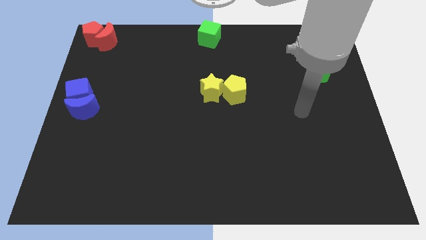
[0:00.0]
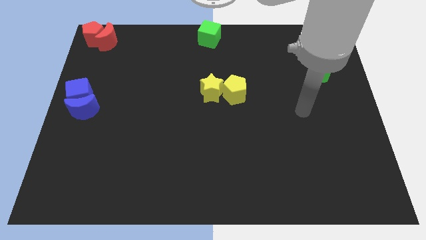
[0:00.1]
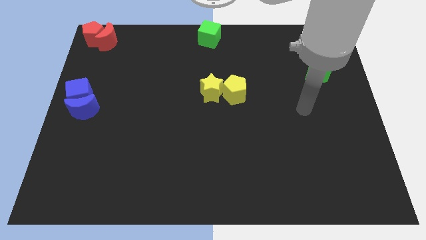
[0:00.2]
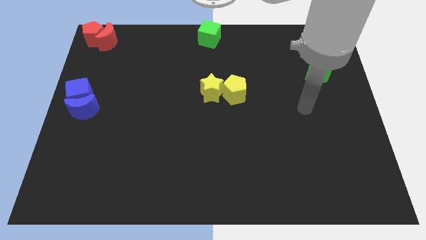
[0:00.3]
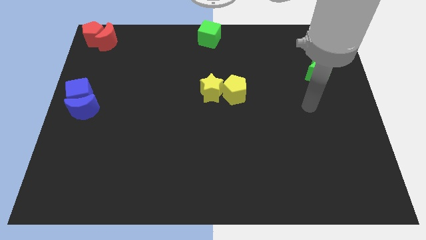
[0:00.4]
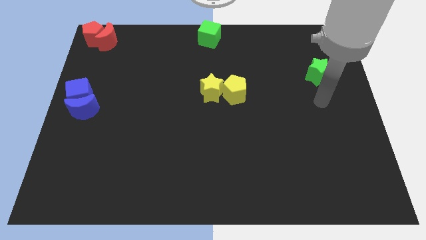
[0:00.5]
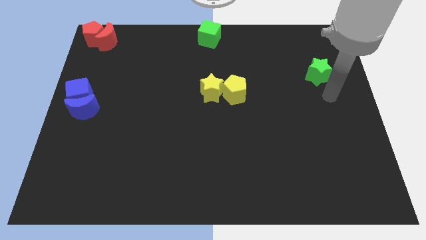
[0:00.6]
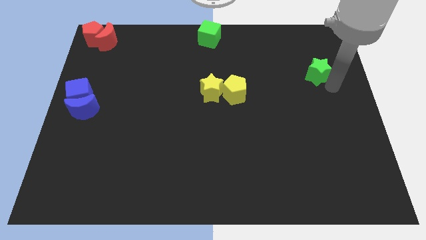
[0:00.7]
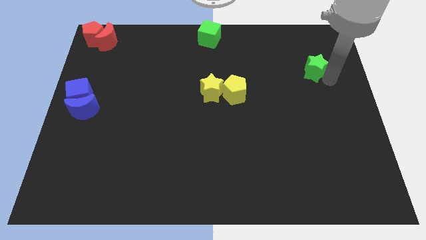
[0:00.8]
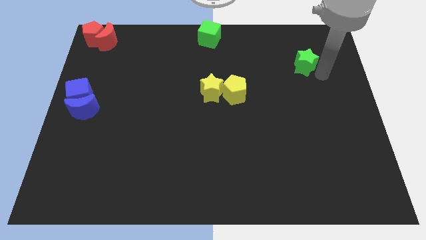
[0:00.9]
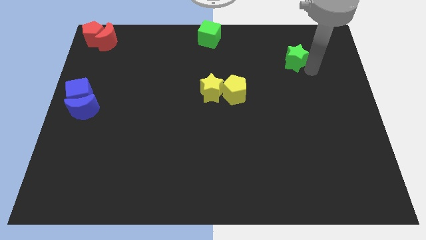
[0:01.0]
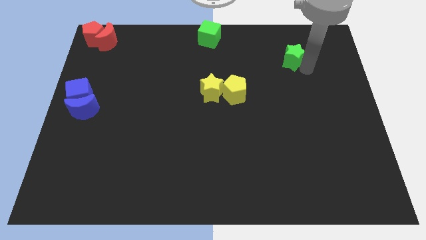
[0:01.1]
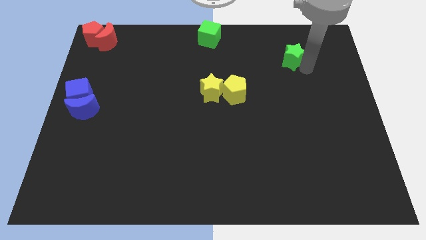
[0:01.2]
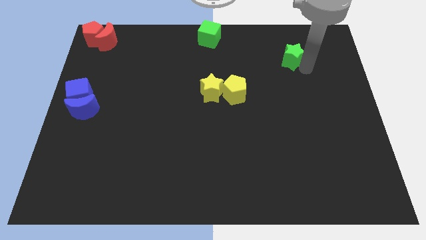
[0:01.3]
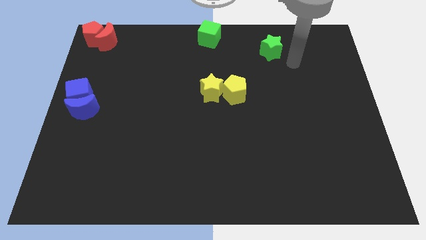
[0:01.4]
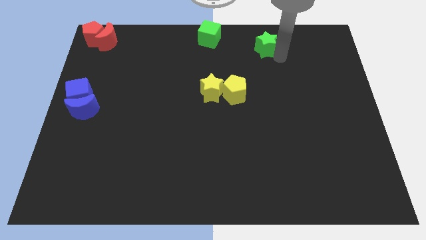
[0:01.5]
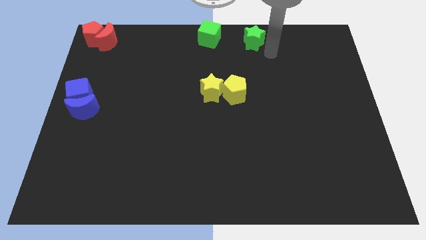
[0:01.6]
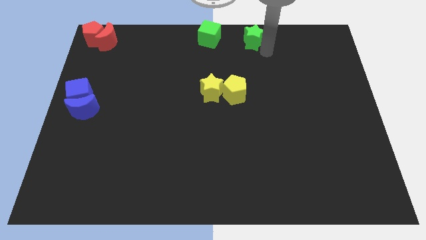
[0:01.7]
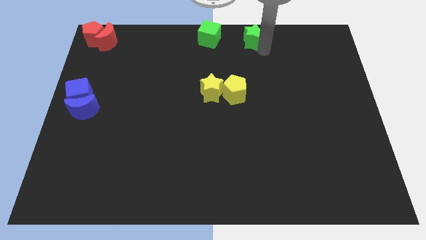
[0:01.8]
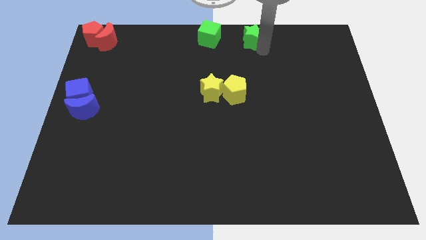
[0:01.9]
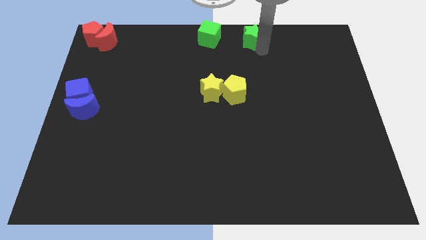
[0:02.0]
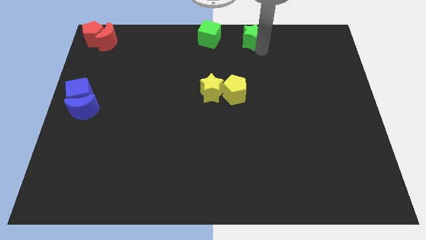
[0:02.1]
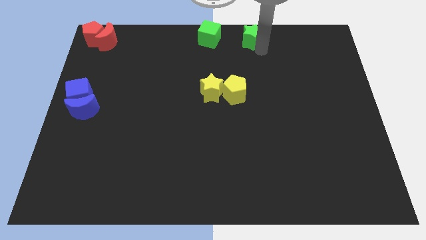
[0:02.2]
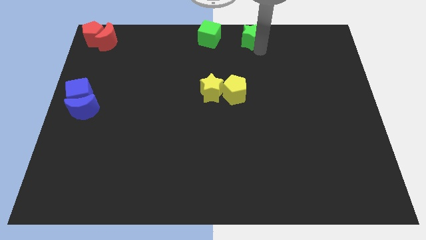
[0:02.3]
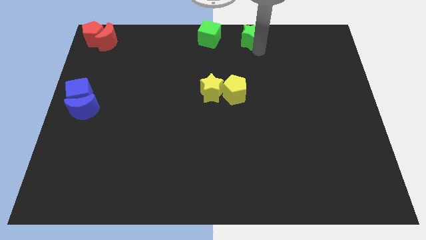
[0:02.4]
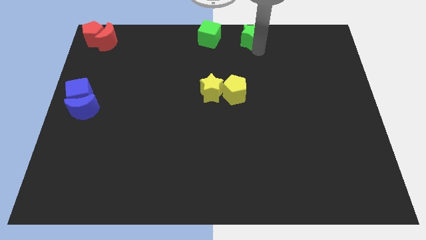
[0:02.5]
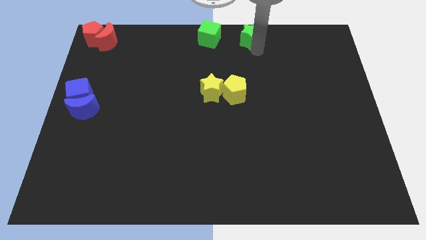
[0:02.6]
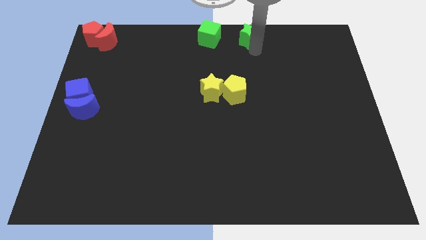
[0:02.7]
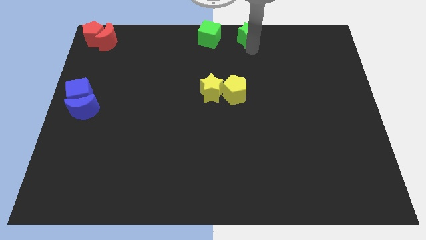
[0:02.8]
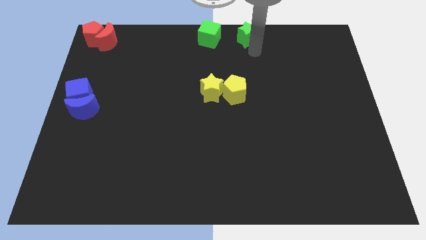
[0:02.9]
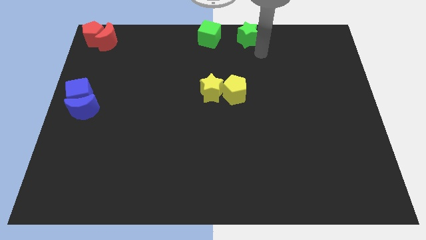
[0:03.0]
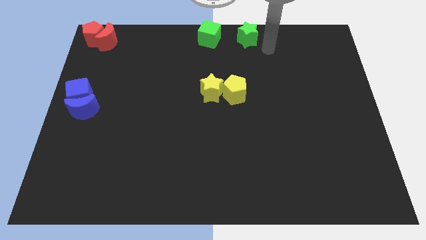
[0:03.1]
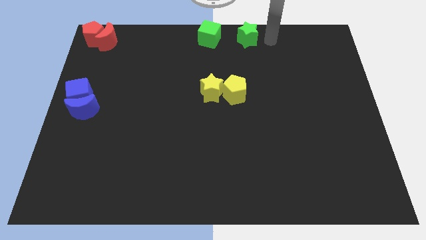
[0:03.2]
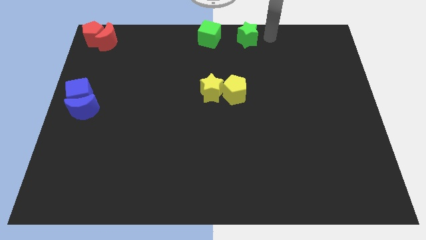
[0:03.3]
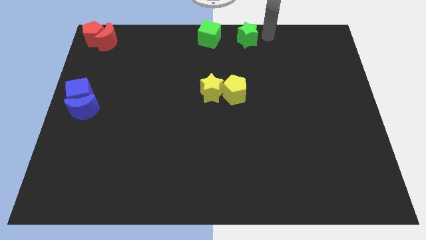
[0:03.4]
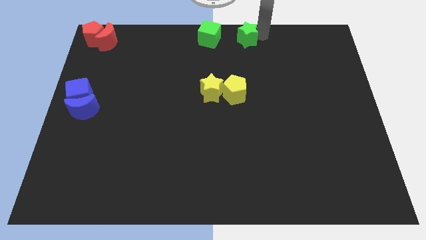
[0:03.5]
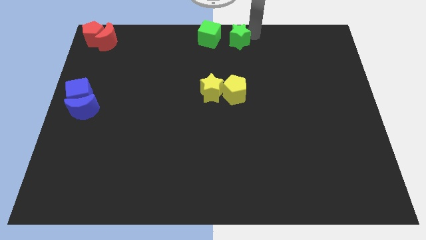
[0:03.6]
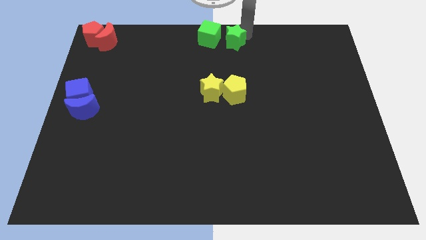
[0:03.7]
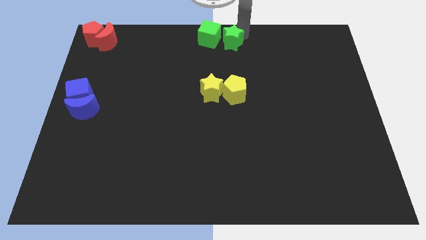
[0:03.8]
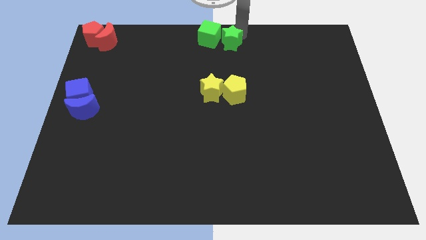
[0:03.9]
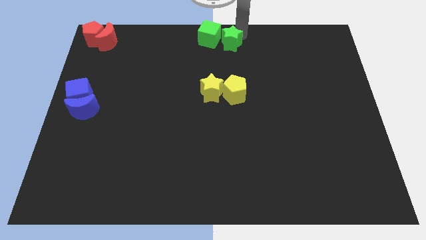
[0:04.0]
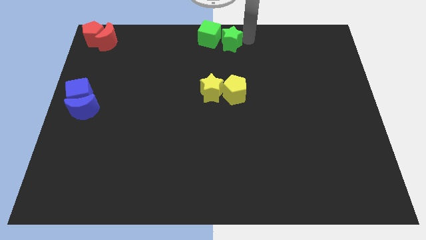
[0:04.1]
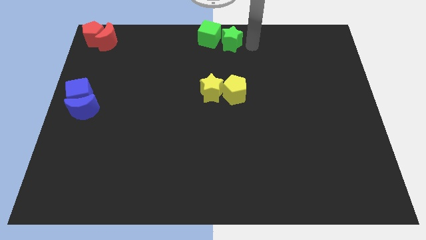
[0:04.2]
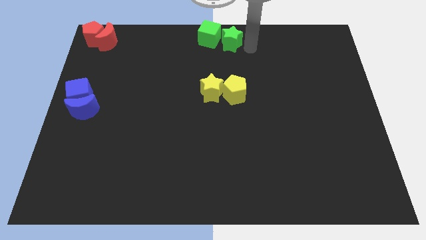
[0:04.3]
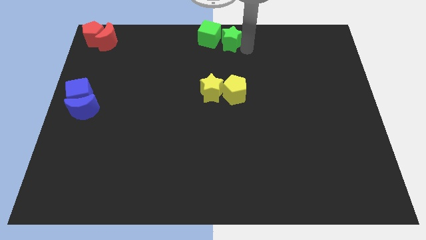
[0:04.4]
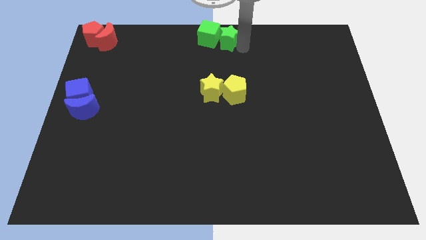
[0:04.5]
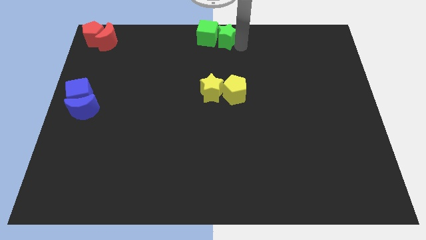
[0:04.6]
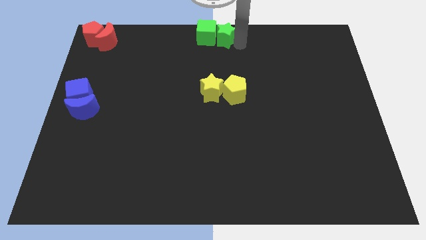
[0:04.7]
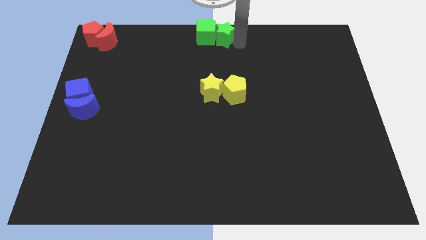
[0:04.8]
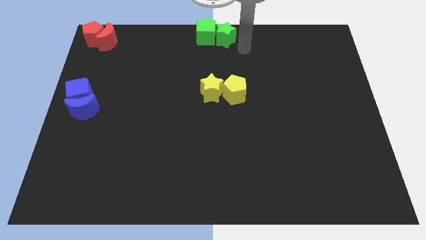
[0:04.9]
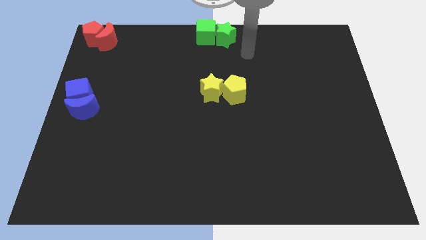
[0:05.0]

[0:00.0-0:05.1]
push the green star towards the green cube

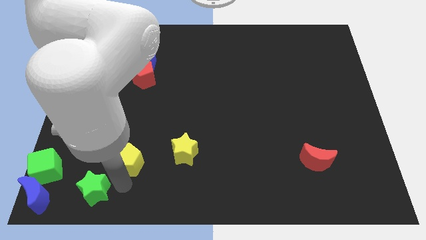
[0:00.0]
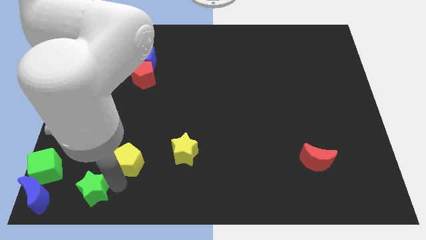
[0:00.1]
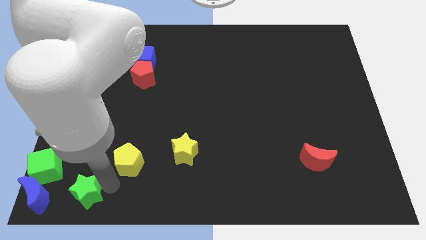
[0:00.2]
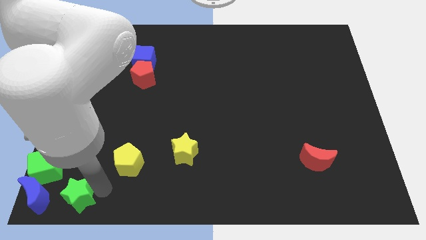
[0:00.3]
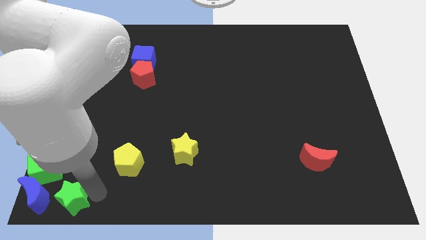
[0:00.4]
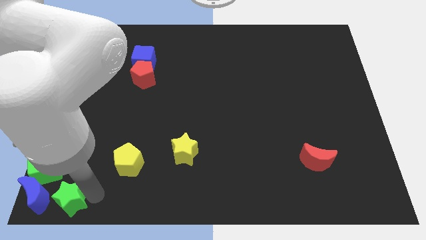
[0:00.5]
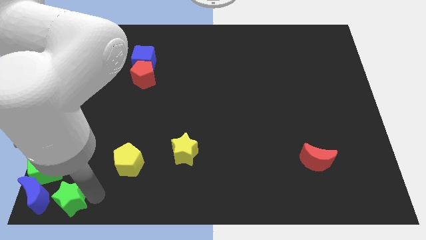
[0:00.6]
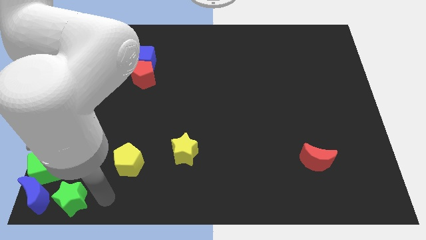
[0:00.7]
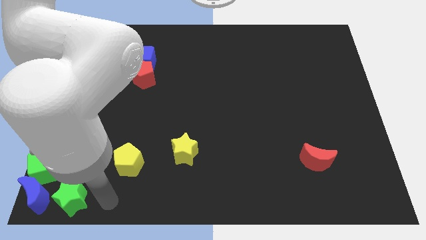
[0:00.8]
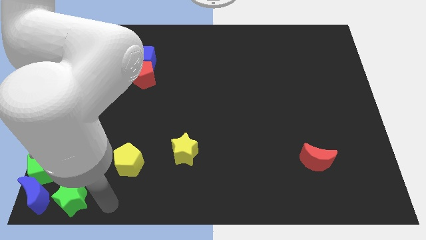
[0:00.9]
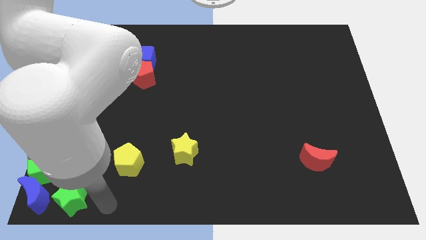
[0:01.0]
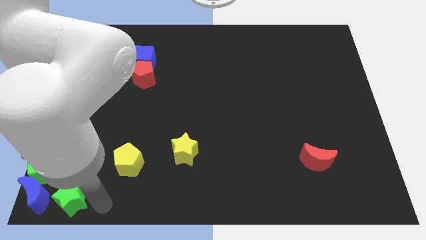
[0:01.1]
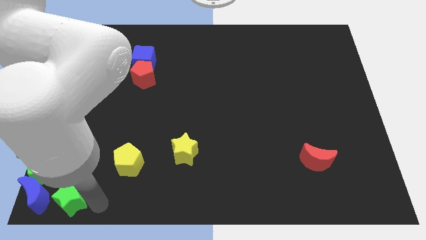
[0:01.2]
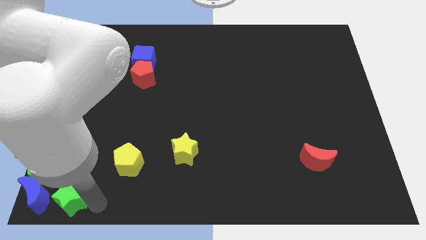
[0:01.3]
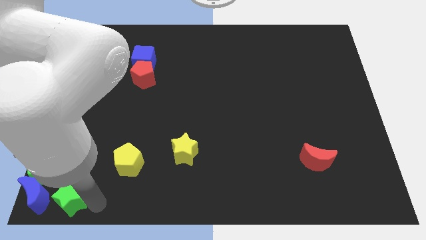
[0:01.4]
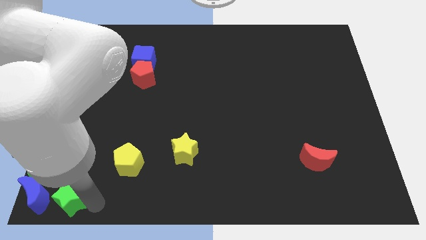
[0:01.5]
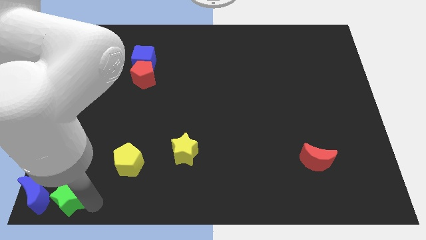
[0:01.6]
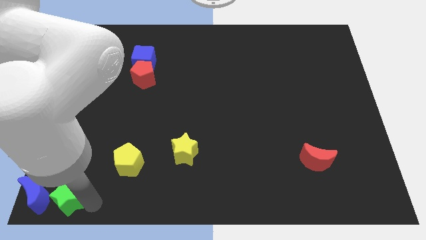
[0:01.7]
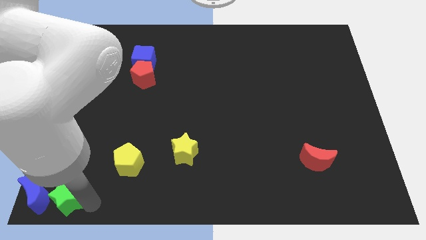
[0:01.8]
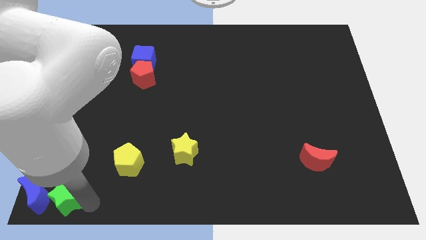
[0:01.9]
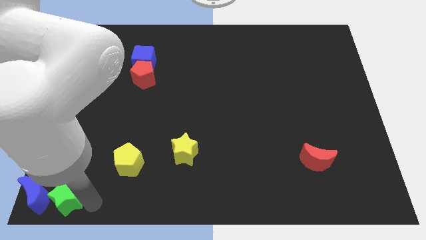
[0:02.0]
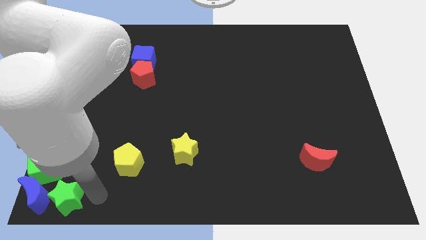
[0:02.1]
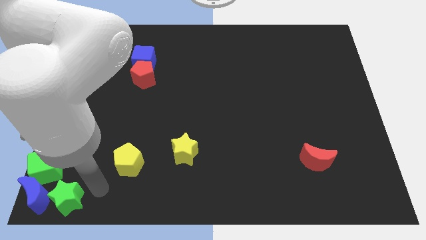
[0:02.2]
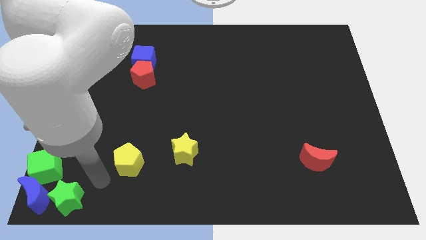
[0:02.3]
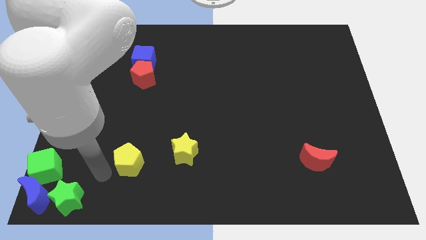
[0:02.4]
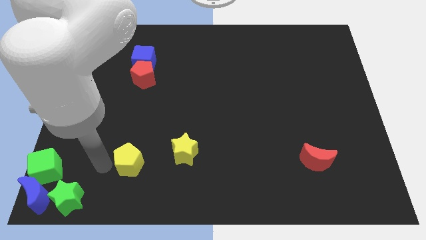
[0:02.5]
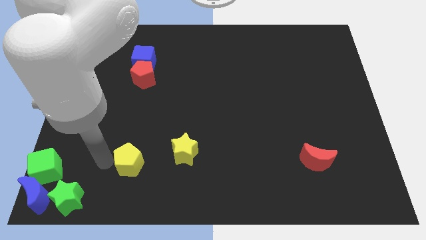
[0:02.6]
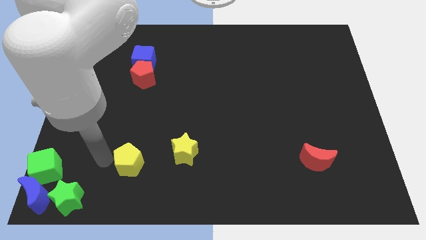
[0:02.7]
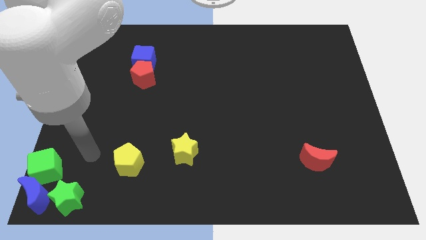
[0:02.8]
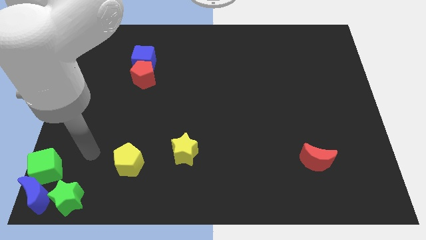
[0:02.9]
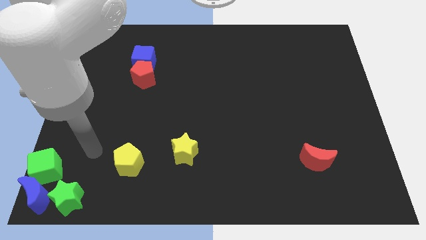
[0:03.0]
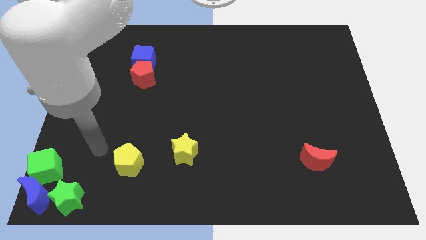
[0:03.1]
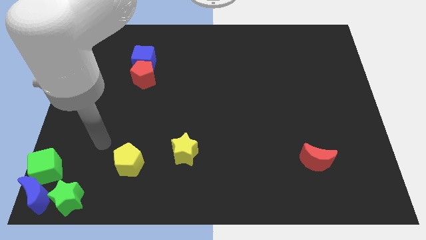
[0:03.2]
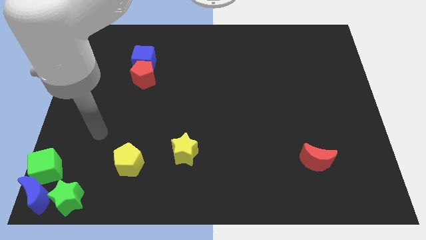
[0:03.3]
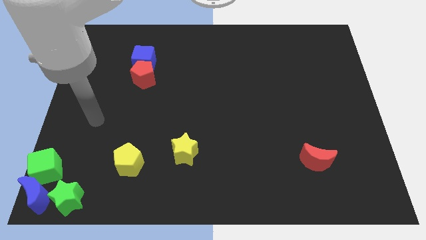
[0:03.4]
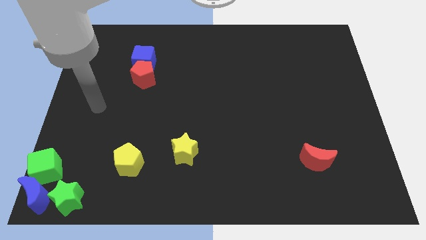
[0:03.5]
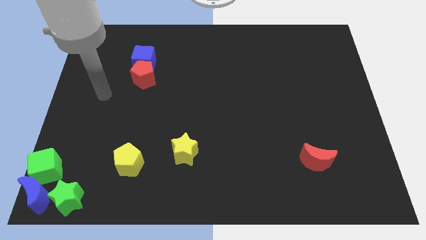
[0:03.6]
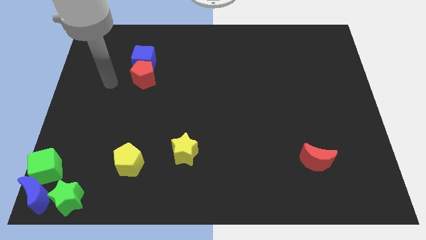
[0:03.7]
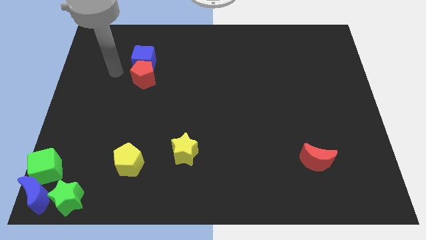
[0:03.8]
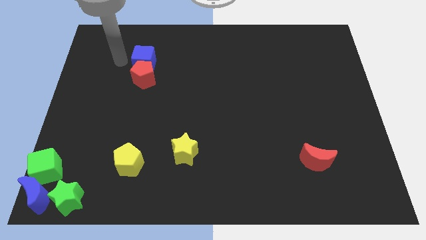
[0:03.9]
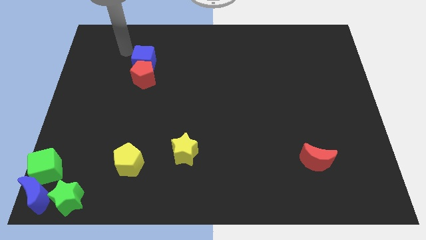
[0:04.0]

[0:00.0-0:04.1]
move green star close to the blue moon
